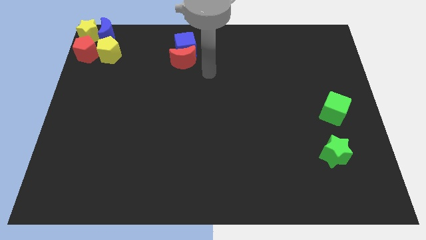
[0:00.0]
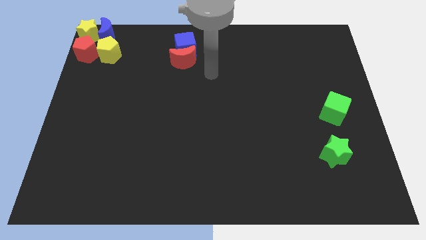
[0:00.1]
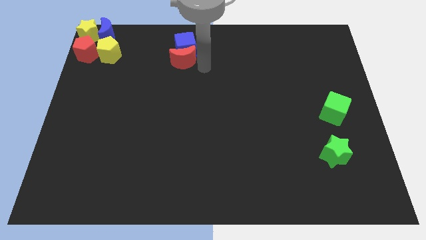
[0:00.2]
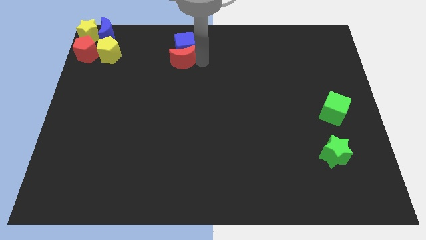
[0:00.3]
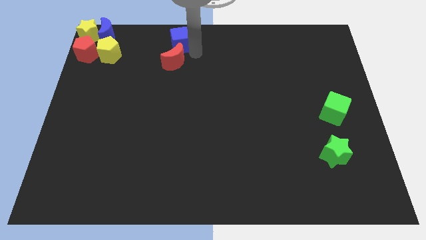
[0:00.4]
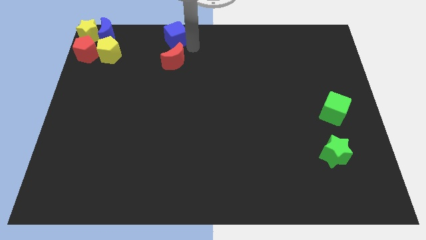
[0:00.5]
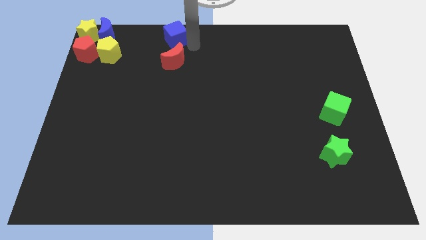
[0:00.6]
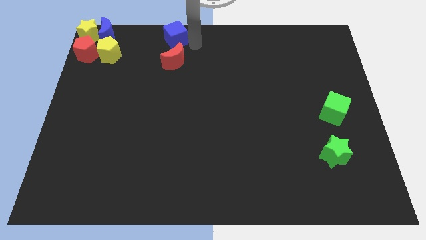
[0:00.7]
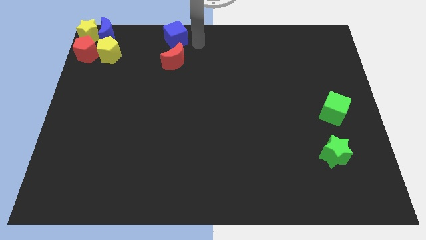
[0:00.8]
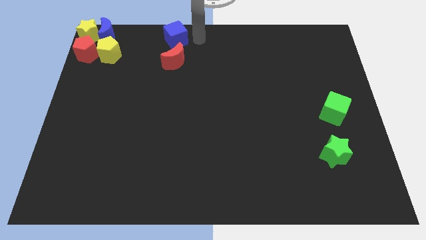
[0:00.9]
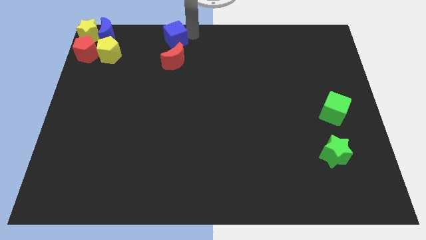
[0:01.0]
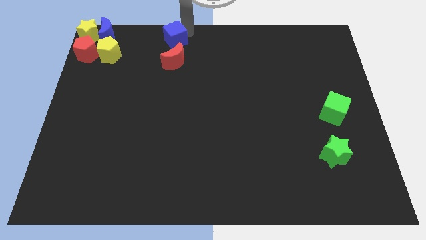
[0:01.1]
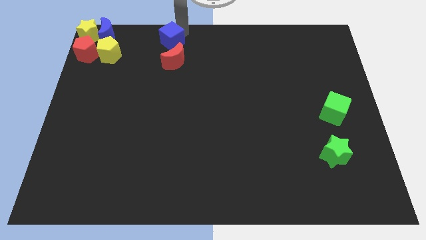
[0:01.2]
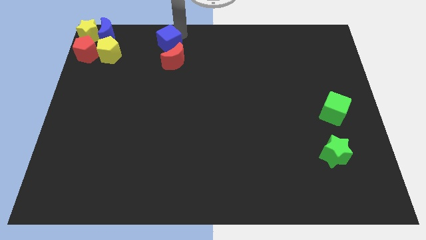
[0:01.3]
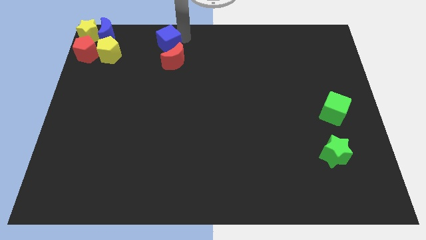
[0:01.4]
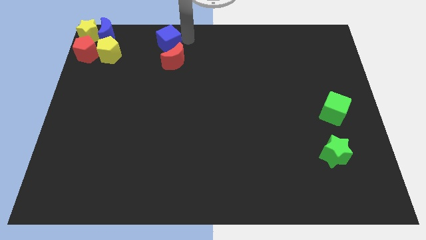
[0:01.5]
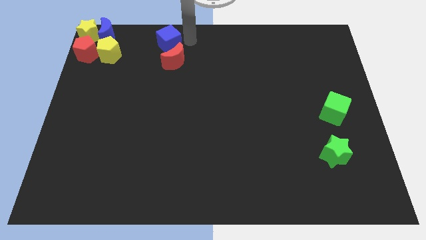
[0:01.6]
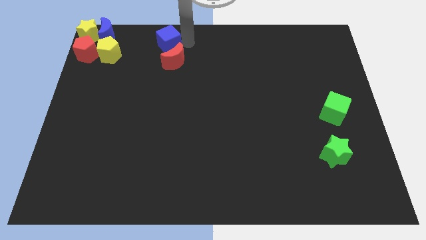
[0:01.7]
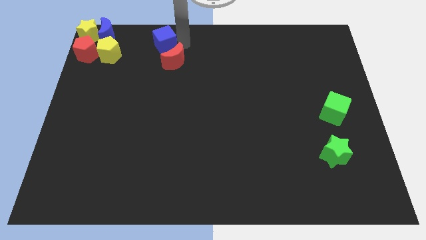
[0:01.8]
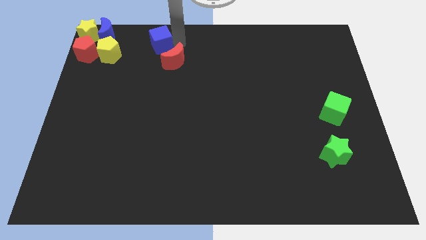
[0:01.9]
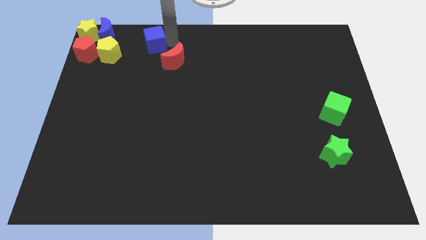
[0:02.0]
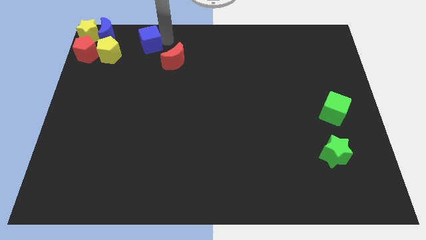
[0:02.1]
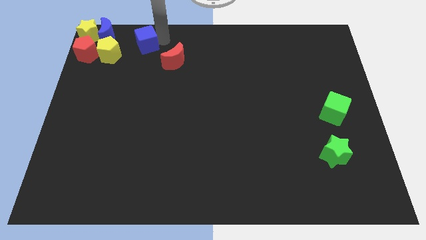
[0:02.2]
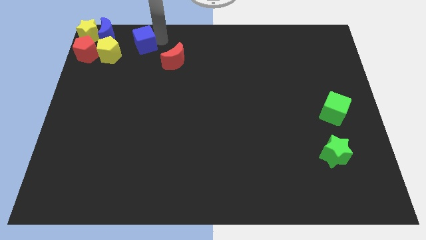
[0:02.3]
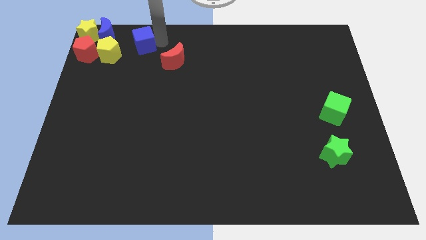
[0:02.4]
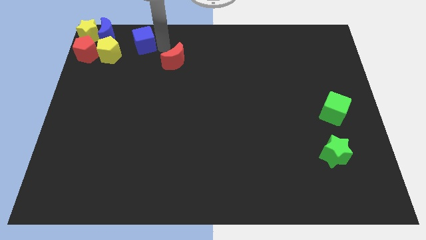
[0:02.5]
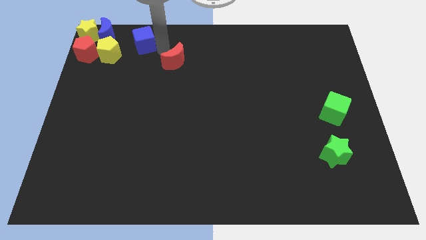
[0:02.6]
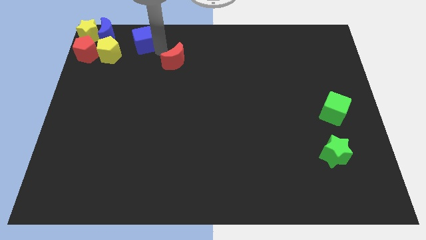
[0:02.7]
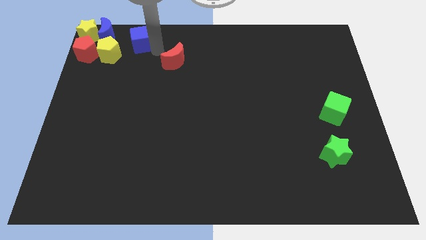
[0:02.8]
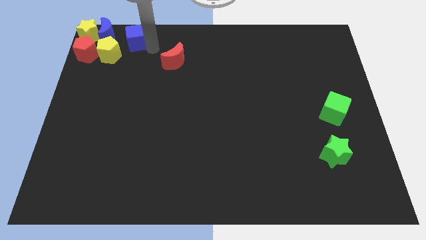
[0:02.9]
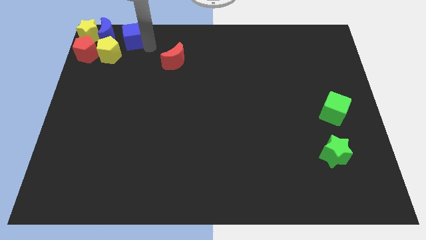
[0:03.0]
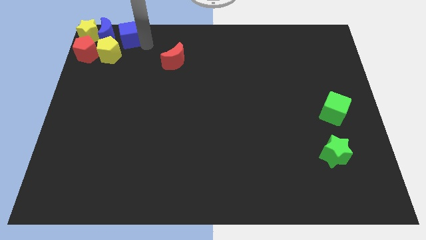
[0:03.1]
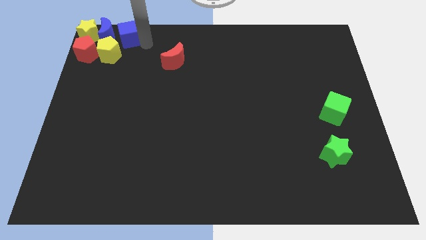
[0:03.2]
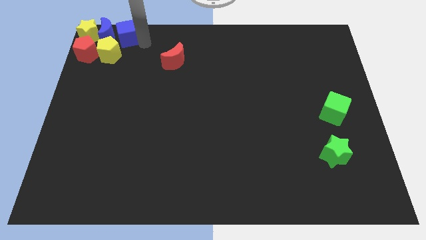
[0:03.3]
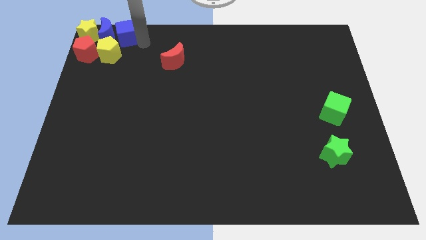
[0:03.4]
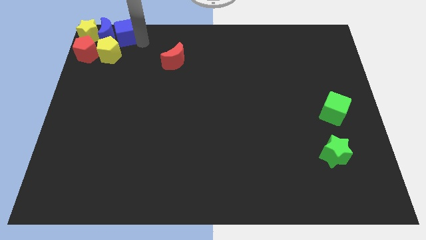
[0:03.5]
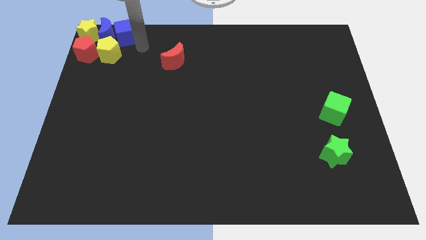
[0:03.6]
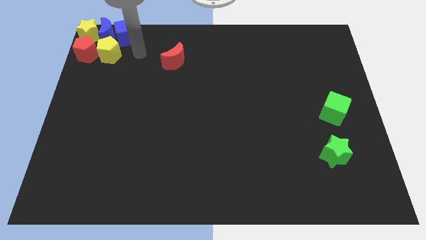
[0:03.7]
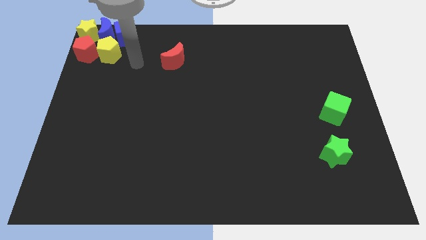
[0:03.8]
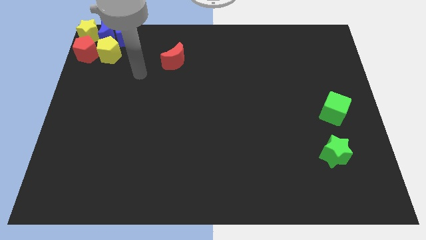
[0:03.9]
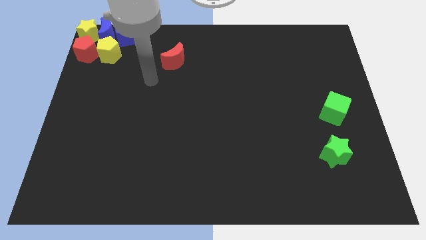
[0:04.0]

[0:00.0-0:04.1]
separate blue cube from red moon

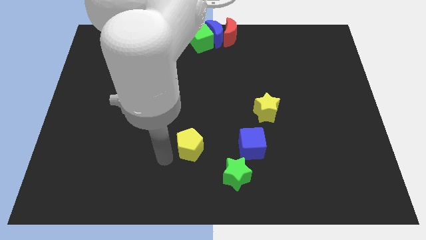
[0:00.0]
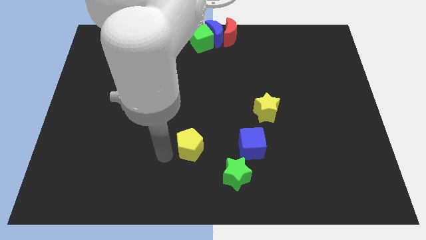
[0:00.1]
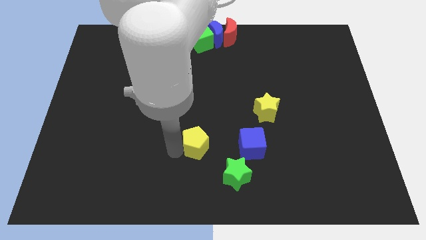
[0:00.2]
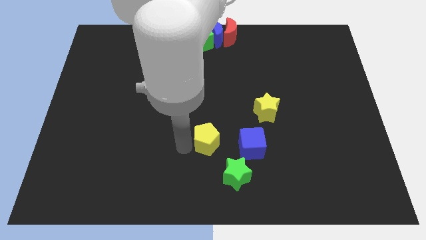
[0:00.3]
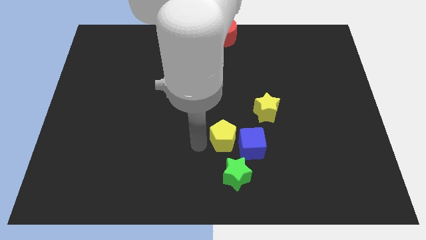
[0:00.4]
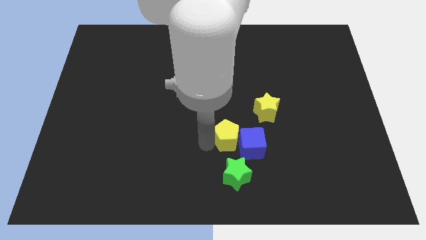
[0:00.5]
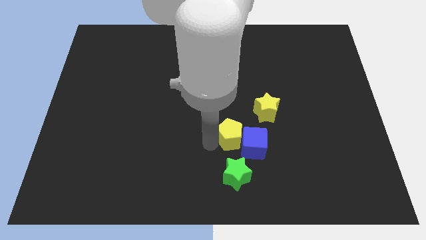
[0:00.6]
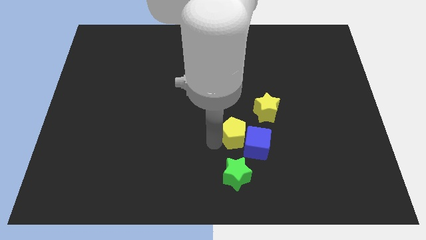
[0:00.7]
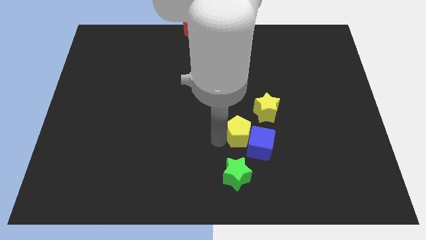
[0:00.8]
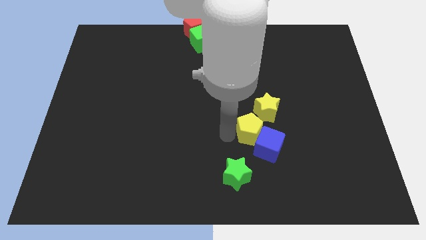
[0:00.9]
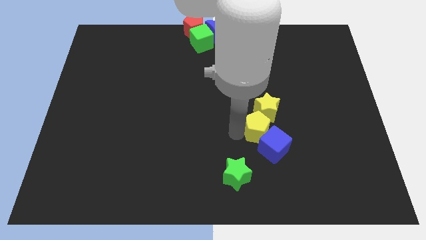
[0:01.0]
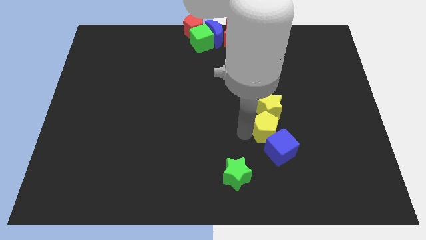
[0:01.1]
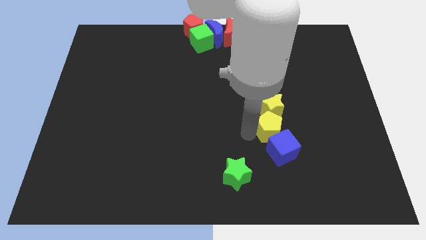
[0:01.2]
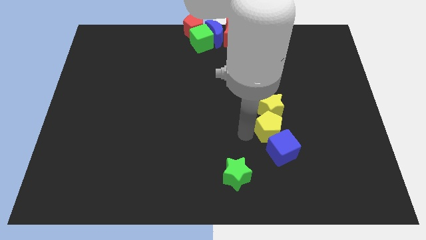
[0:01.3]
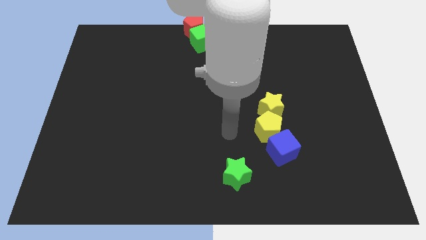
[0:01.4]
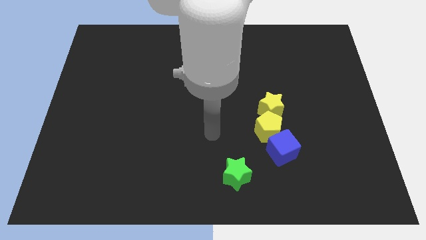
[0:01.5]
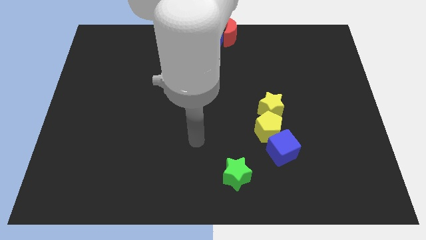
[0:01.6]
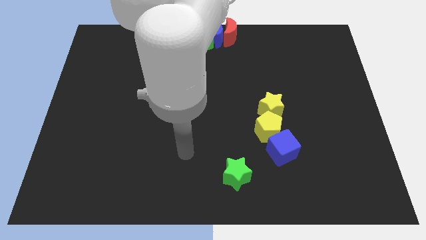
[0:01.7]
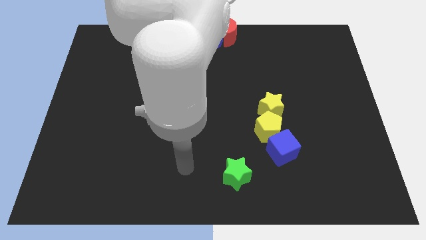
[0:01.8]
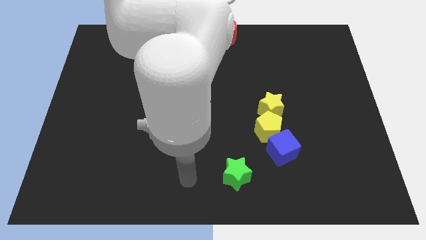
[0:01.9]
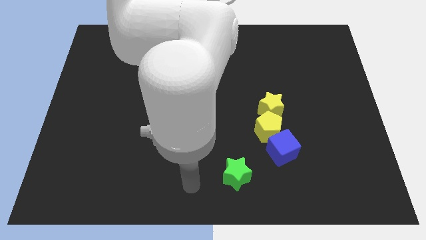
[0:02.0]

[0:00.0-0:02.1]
push the yellow pentagon between the yellow star and the blue cube

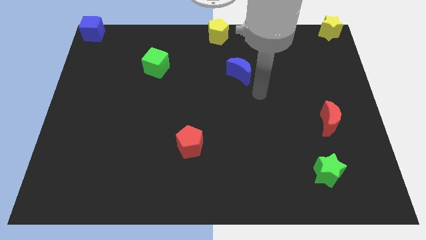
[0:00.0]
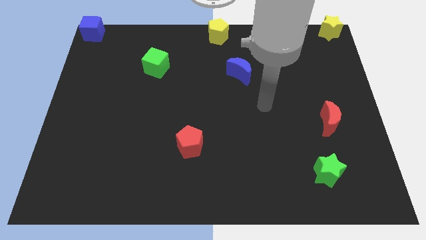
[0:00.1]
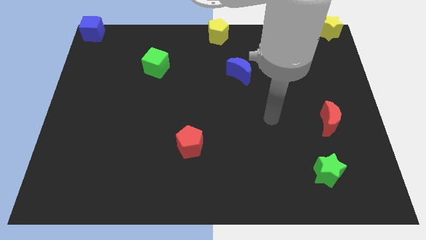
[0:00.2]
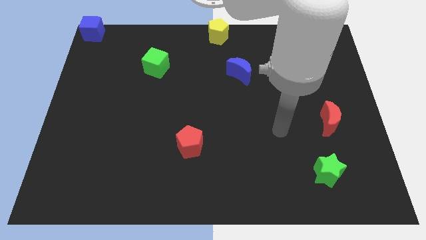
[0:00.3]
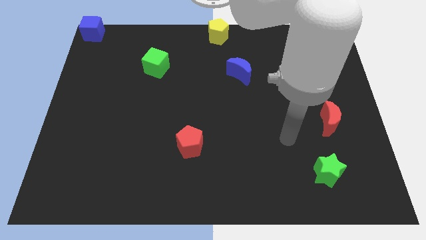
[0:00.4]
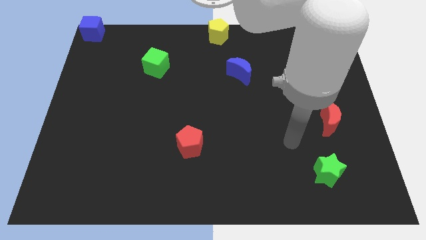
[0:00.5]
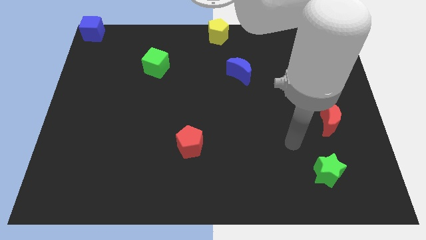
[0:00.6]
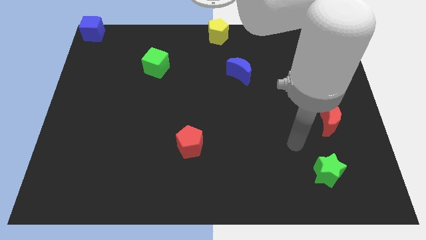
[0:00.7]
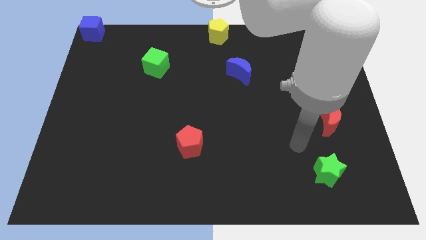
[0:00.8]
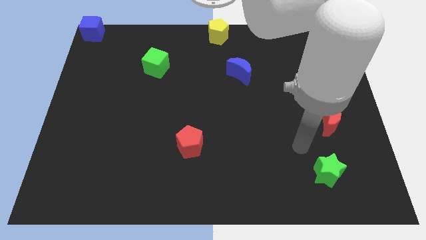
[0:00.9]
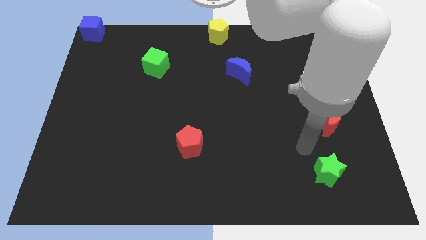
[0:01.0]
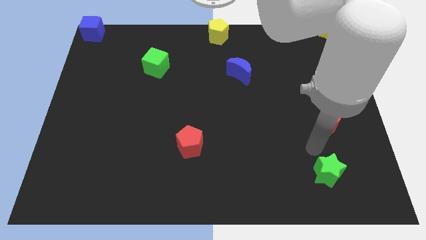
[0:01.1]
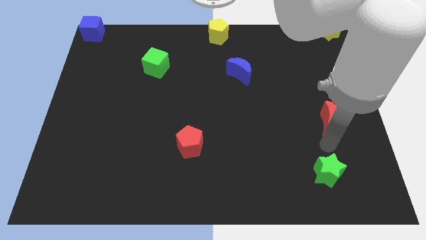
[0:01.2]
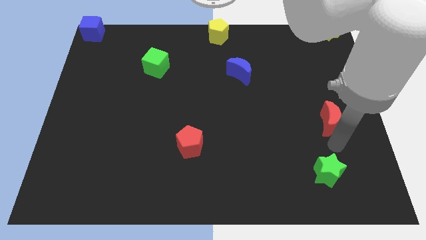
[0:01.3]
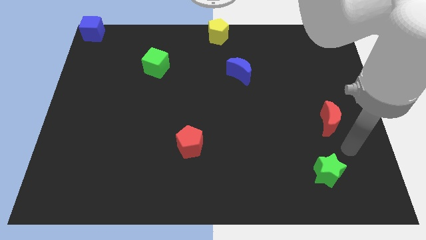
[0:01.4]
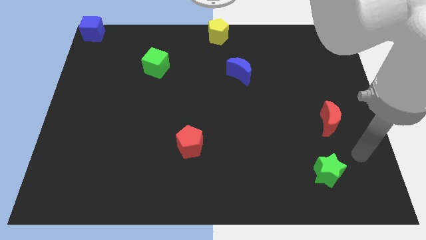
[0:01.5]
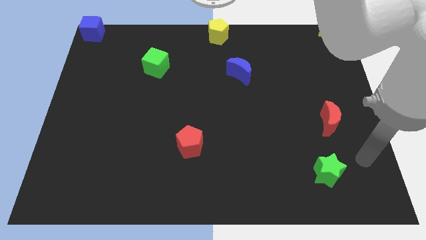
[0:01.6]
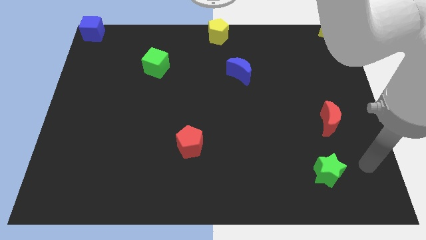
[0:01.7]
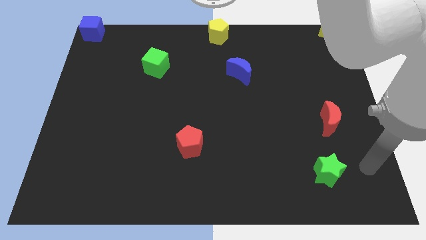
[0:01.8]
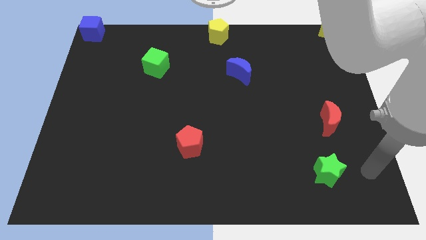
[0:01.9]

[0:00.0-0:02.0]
place the arm to the right of the green star

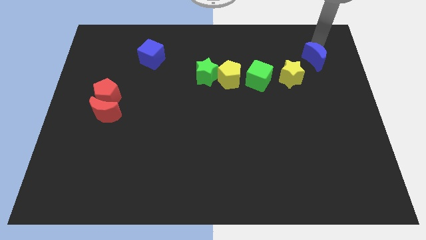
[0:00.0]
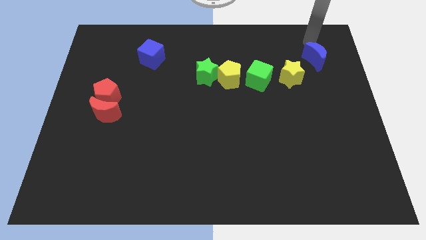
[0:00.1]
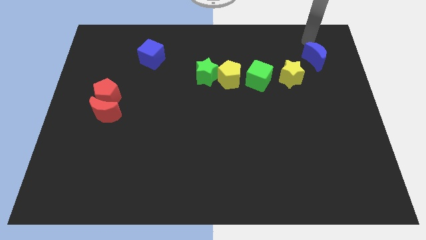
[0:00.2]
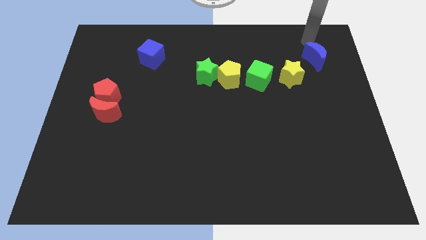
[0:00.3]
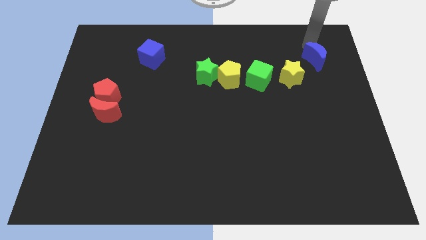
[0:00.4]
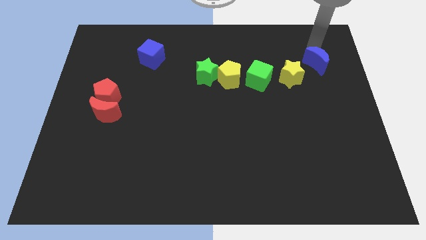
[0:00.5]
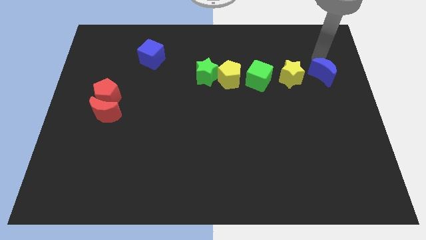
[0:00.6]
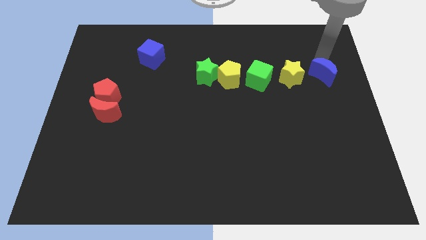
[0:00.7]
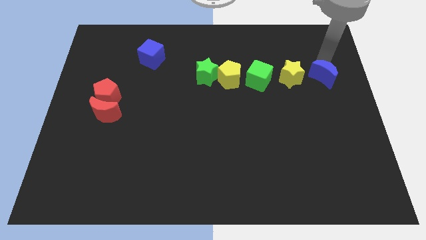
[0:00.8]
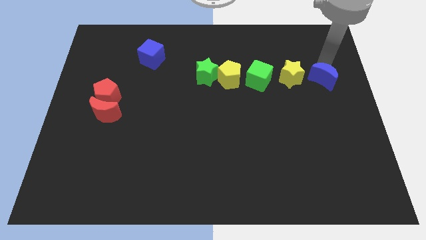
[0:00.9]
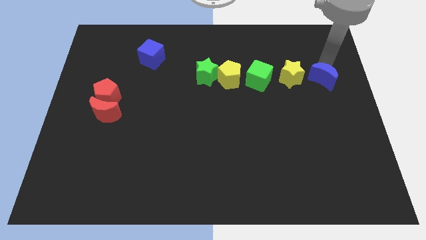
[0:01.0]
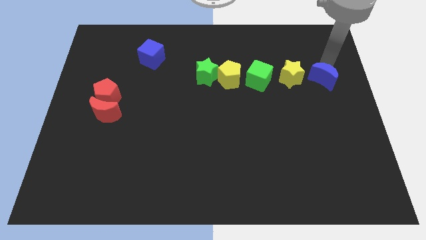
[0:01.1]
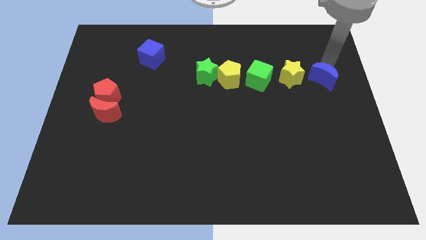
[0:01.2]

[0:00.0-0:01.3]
move the blue crescent to the right side of the yellow star
